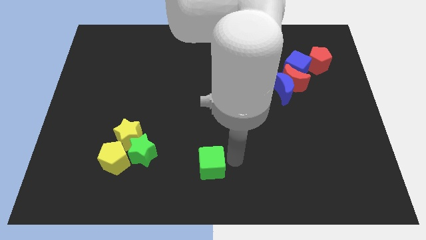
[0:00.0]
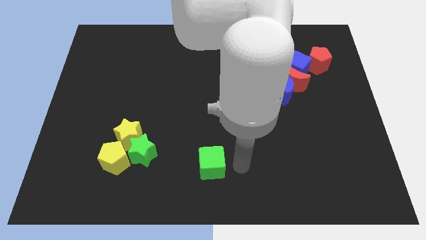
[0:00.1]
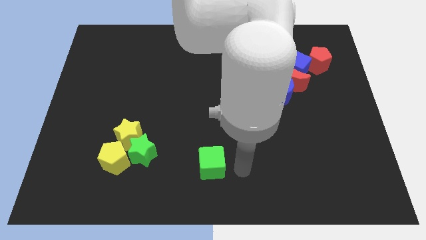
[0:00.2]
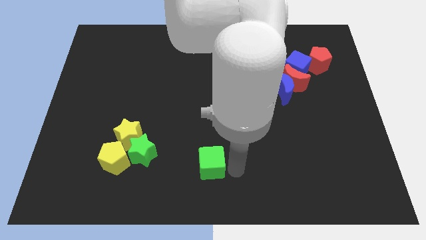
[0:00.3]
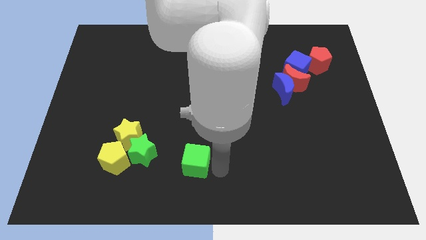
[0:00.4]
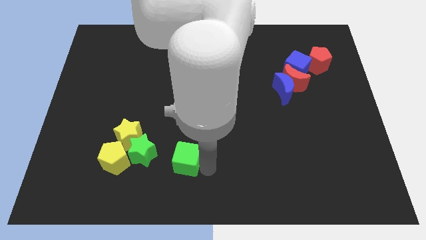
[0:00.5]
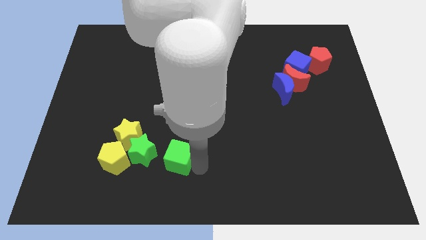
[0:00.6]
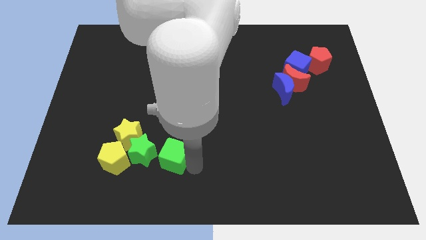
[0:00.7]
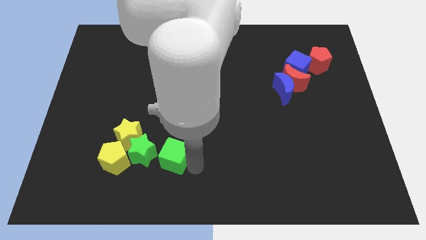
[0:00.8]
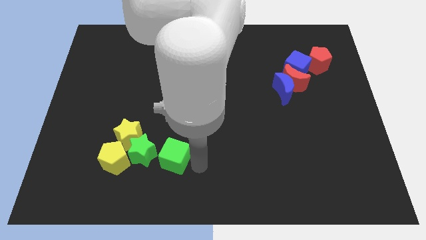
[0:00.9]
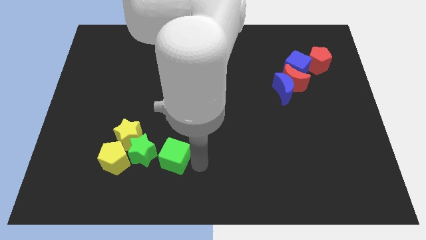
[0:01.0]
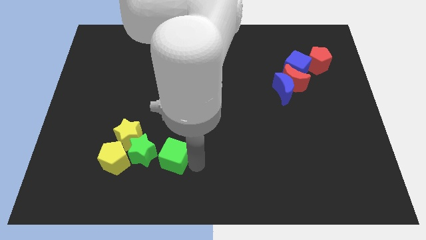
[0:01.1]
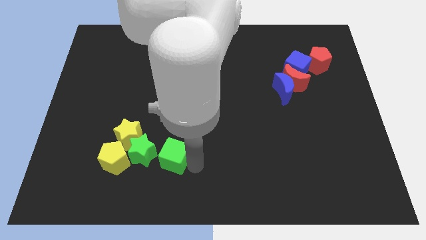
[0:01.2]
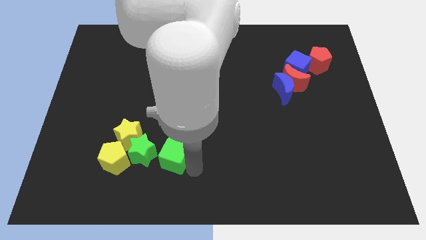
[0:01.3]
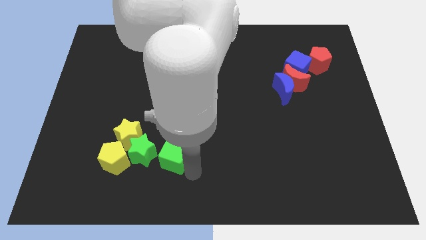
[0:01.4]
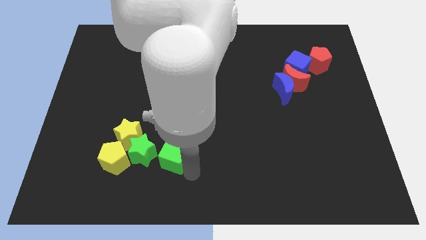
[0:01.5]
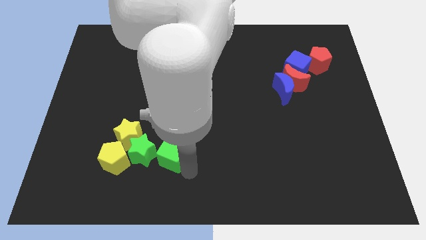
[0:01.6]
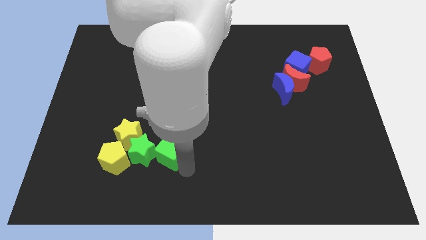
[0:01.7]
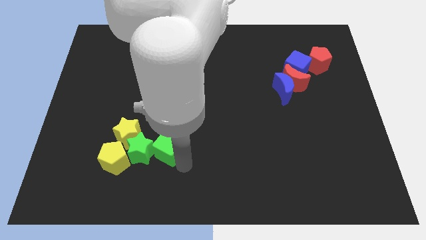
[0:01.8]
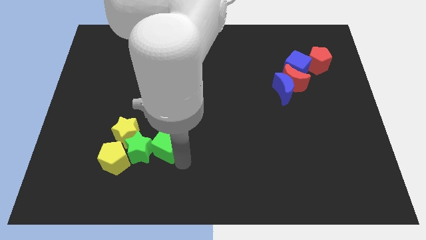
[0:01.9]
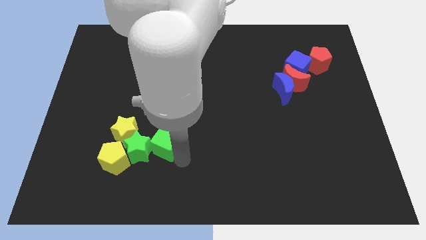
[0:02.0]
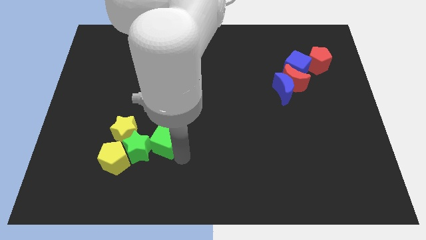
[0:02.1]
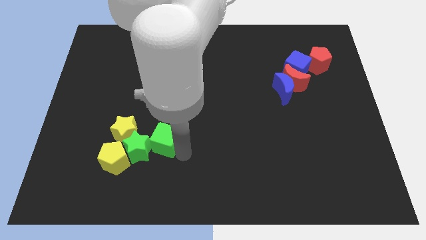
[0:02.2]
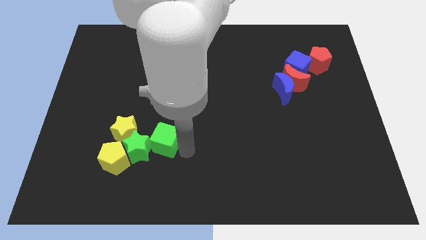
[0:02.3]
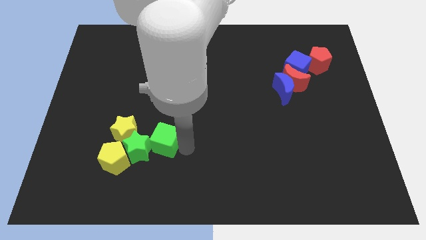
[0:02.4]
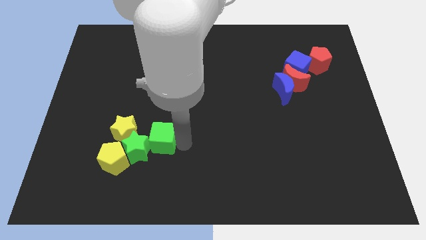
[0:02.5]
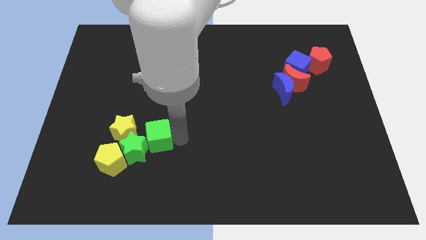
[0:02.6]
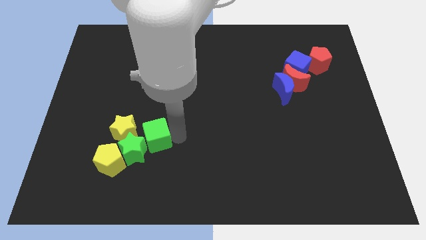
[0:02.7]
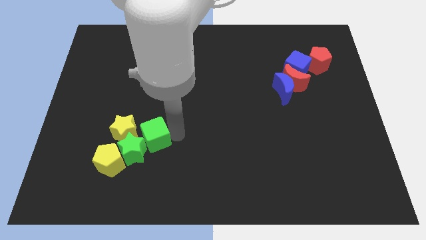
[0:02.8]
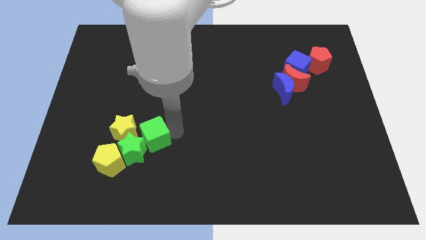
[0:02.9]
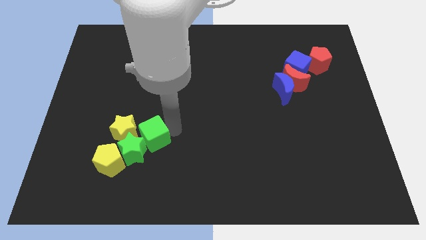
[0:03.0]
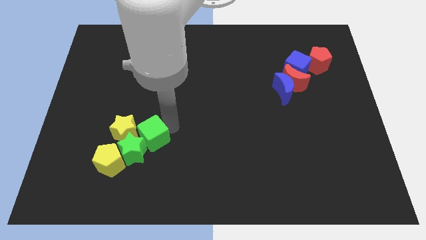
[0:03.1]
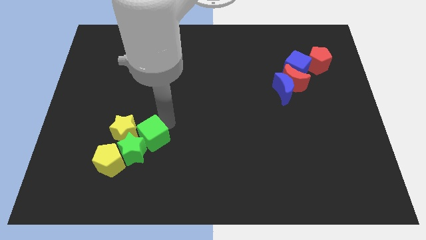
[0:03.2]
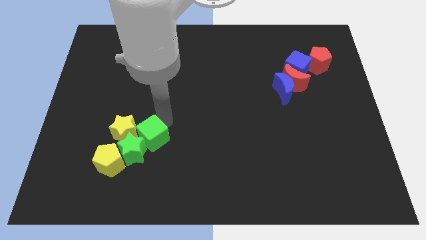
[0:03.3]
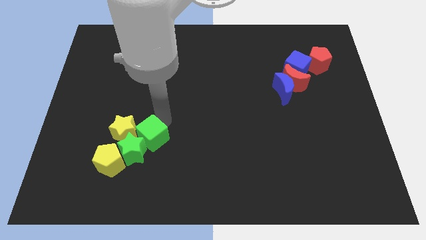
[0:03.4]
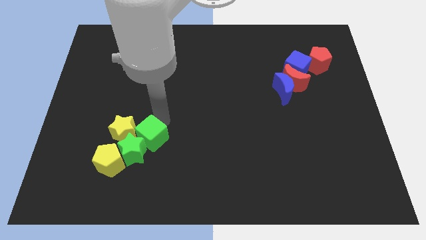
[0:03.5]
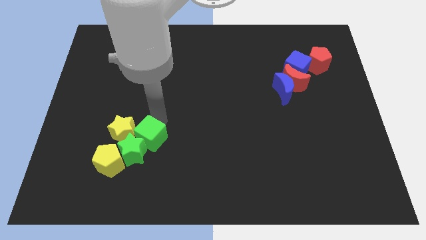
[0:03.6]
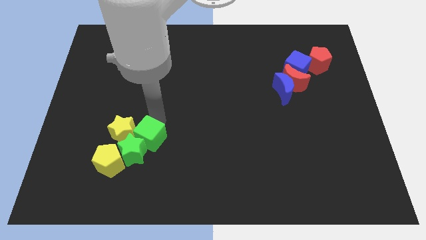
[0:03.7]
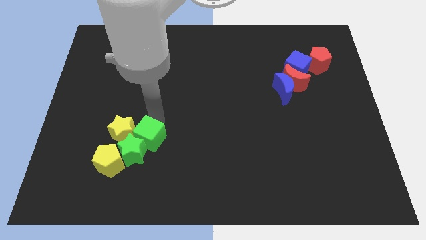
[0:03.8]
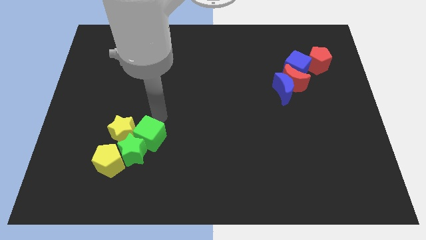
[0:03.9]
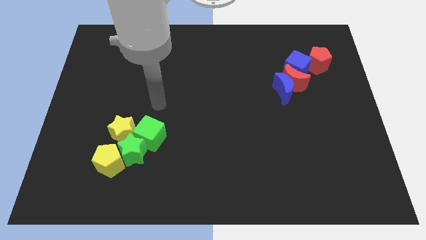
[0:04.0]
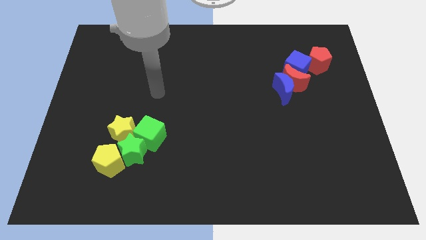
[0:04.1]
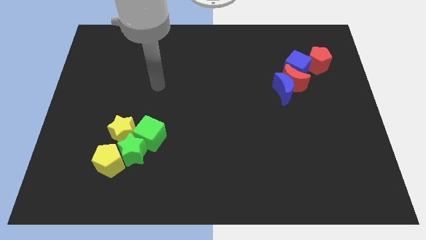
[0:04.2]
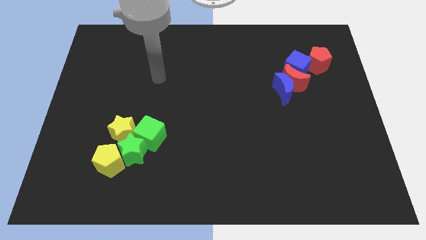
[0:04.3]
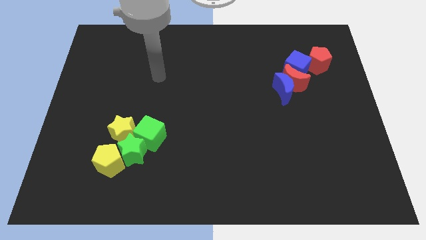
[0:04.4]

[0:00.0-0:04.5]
move the green cube into the green star and yellow star

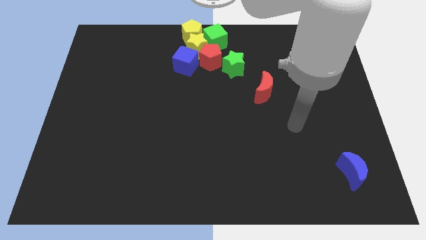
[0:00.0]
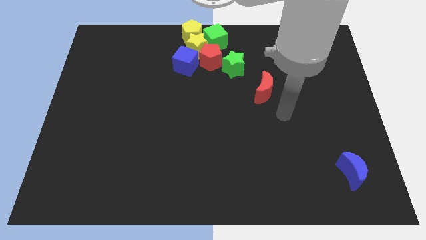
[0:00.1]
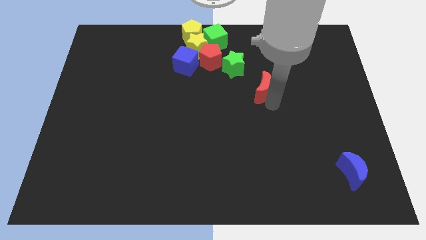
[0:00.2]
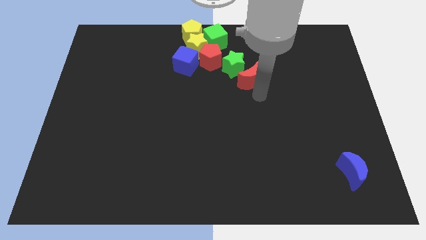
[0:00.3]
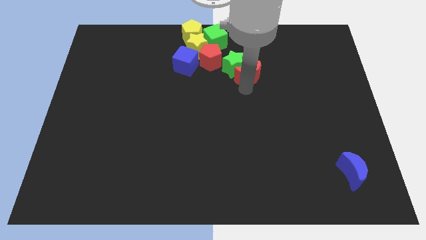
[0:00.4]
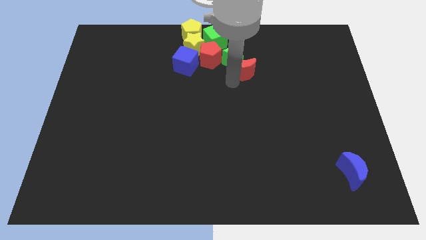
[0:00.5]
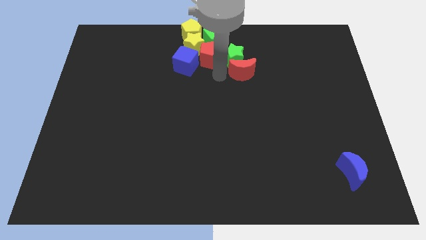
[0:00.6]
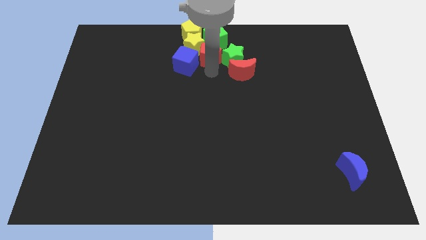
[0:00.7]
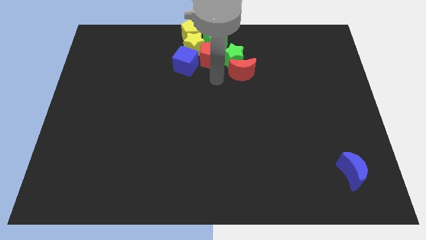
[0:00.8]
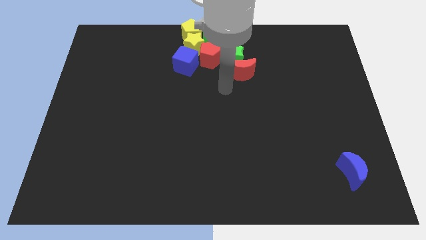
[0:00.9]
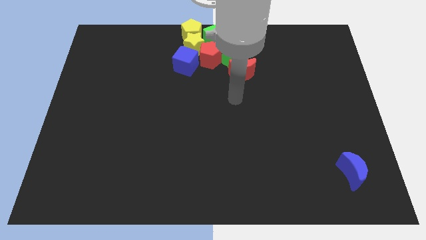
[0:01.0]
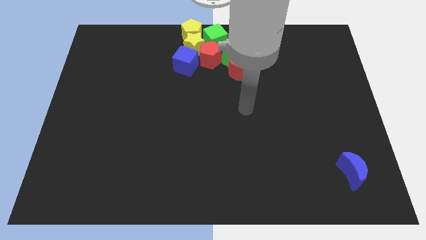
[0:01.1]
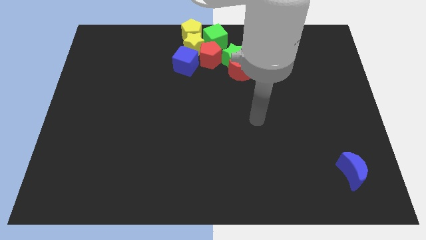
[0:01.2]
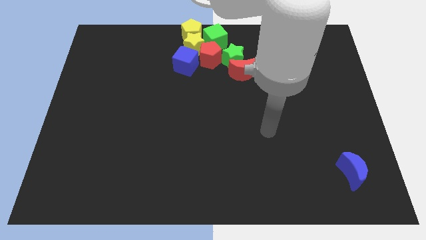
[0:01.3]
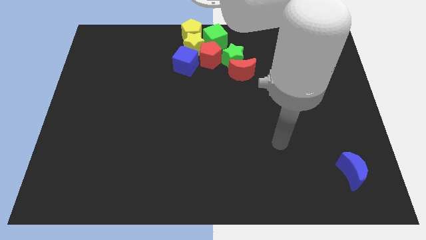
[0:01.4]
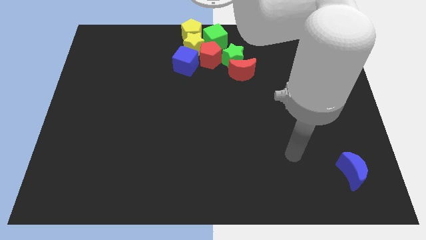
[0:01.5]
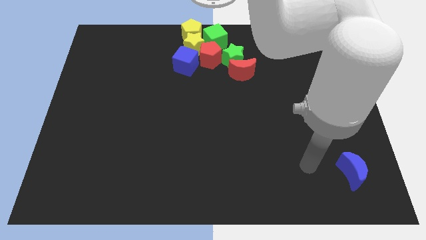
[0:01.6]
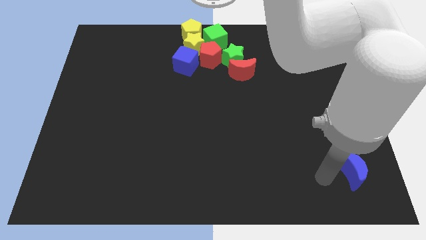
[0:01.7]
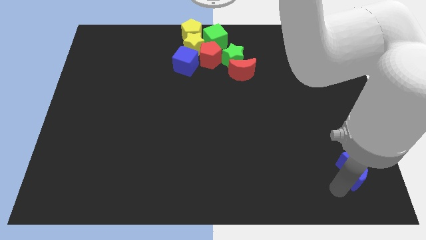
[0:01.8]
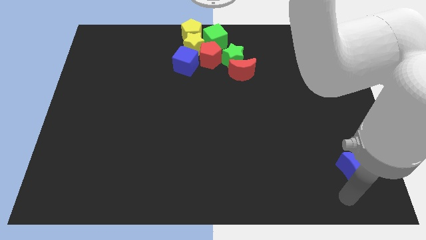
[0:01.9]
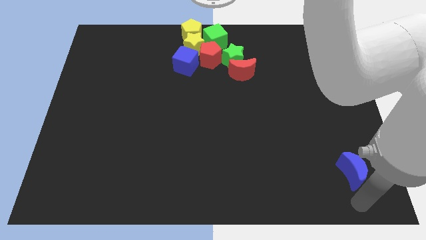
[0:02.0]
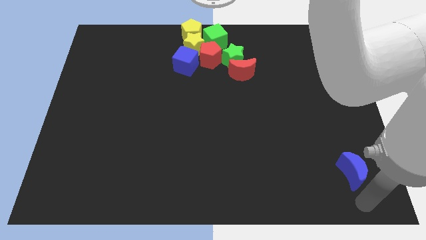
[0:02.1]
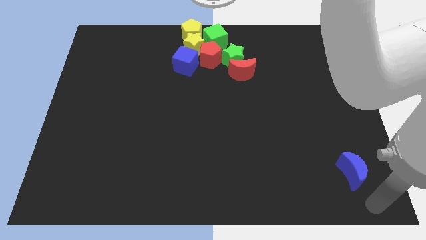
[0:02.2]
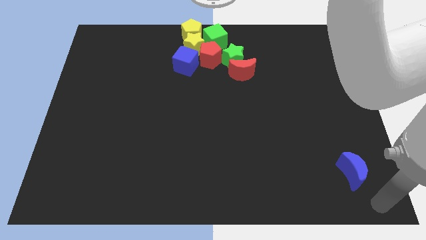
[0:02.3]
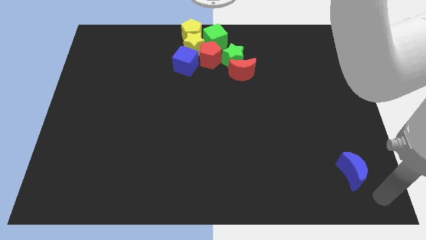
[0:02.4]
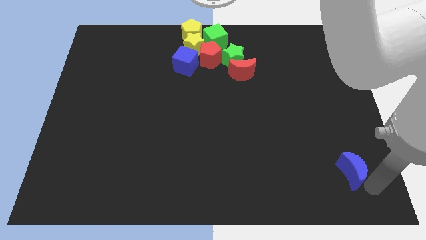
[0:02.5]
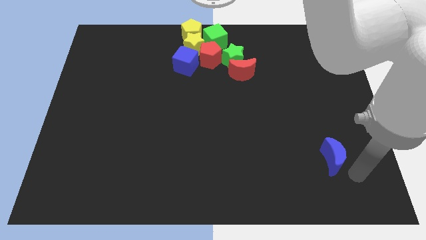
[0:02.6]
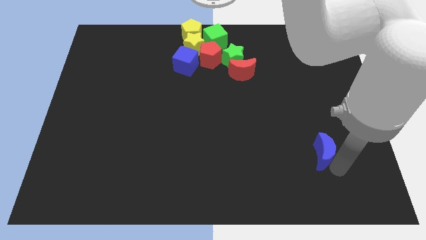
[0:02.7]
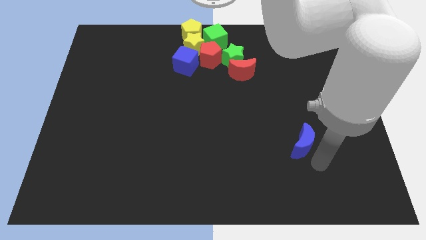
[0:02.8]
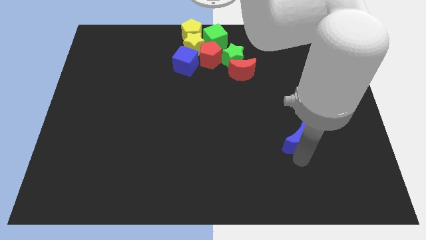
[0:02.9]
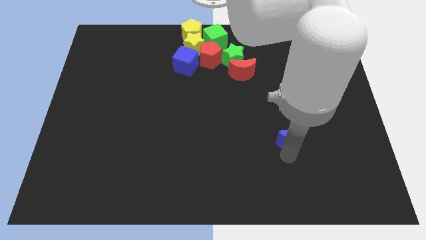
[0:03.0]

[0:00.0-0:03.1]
place red crescent into the green star

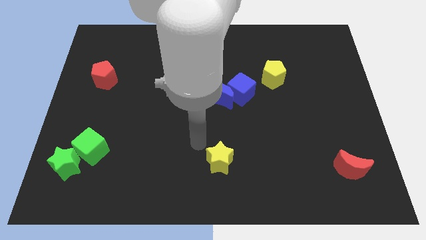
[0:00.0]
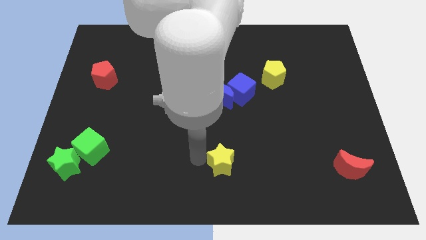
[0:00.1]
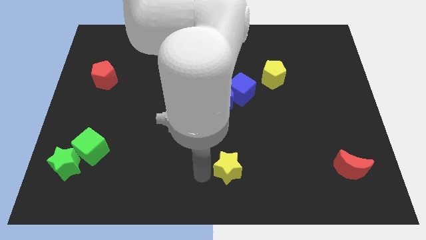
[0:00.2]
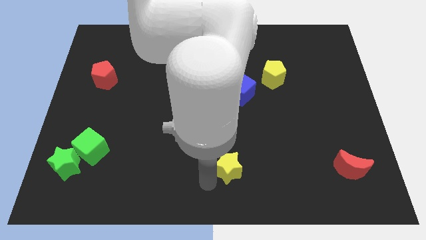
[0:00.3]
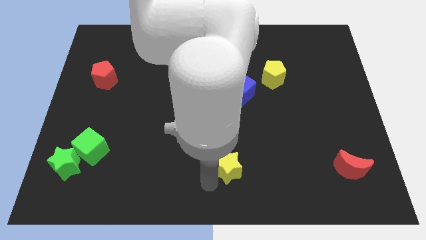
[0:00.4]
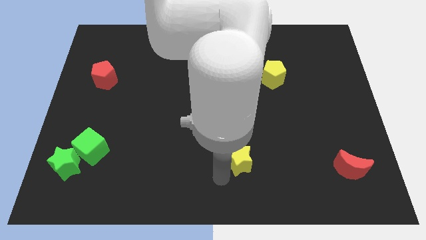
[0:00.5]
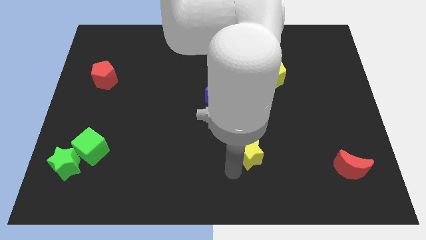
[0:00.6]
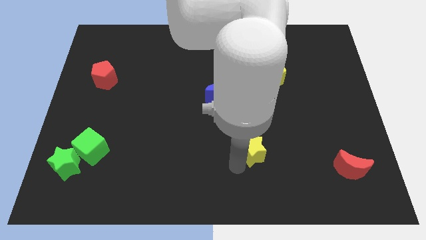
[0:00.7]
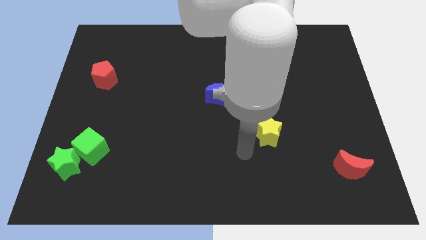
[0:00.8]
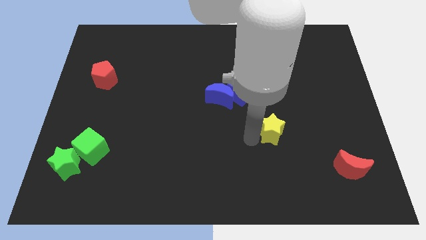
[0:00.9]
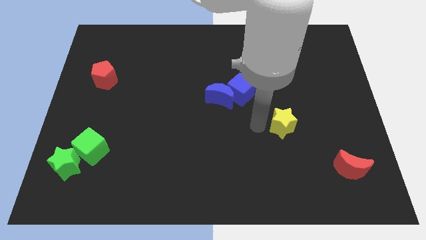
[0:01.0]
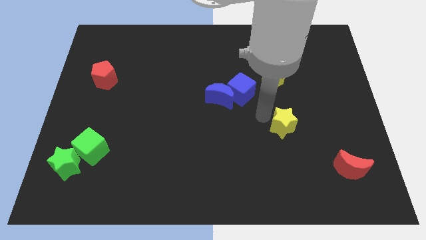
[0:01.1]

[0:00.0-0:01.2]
place the yellow star vertically below the yellow pentagon
